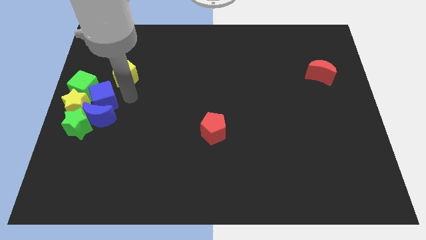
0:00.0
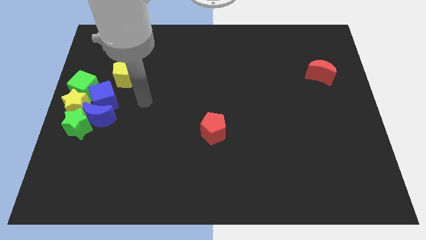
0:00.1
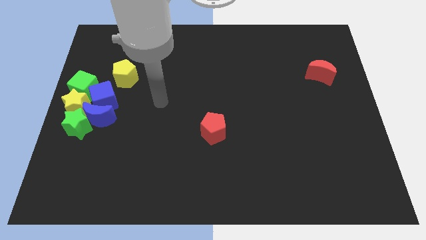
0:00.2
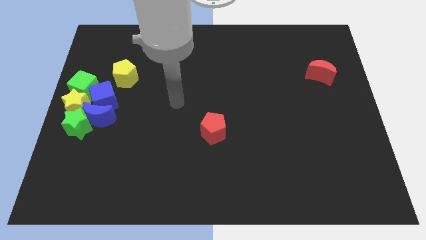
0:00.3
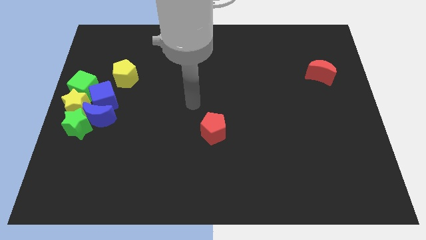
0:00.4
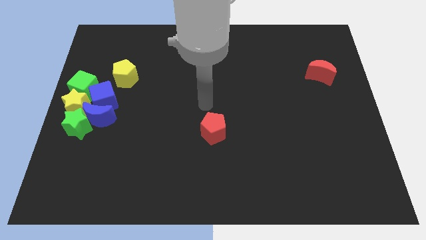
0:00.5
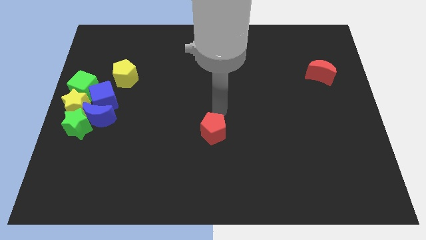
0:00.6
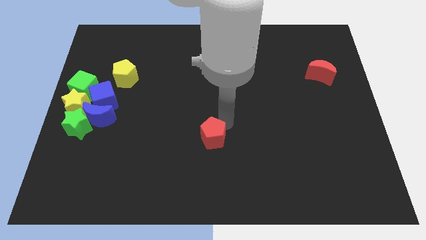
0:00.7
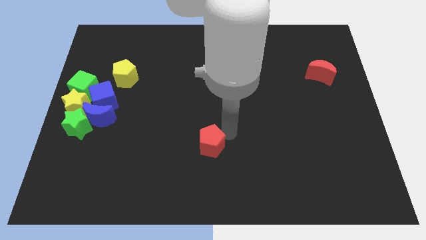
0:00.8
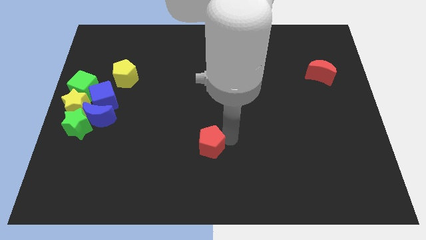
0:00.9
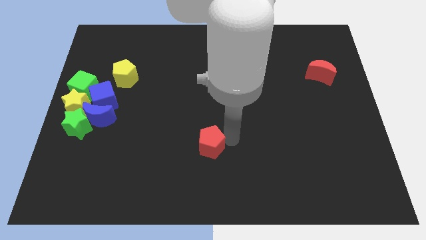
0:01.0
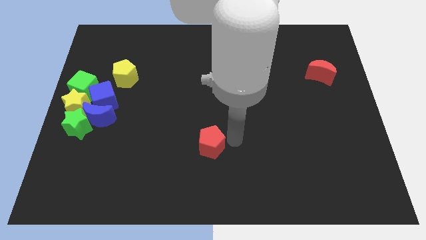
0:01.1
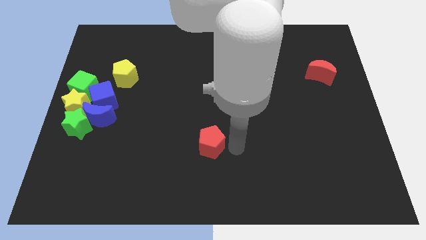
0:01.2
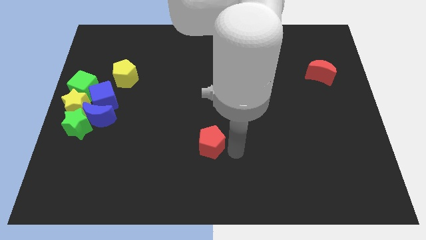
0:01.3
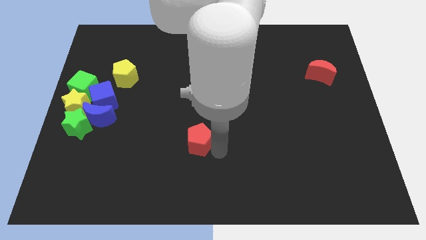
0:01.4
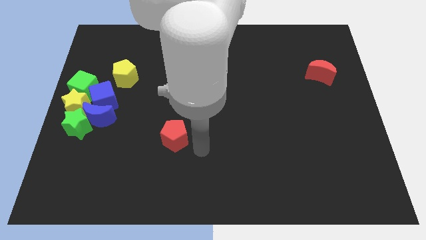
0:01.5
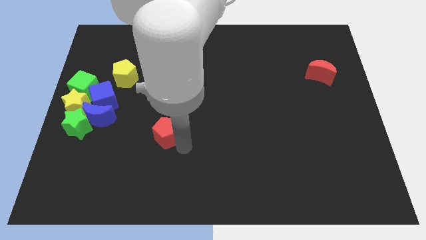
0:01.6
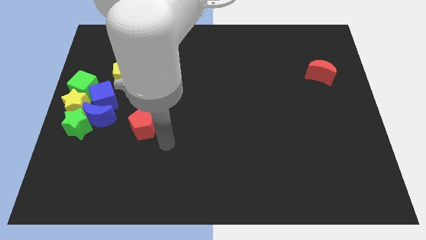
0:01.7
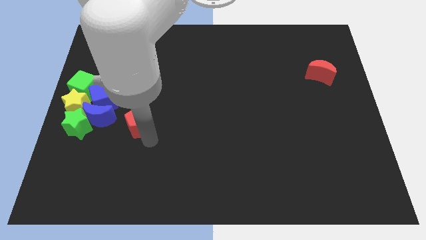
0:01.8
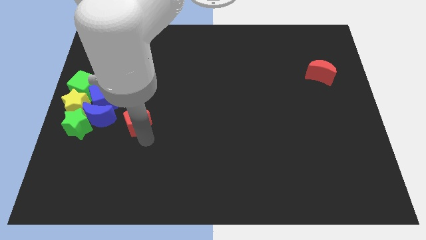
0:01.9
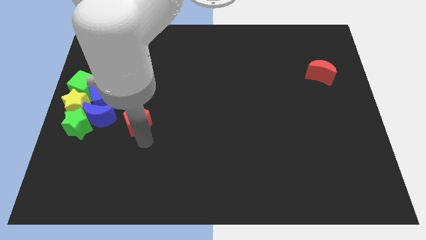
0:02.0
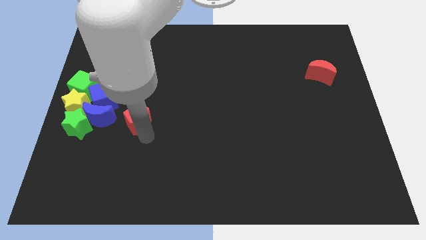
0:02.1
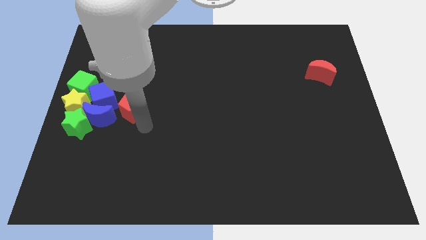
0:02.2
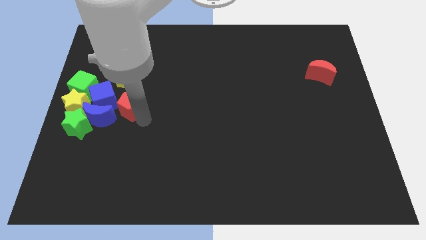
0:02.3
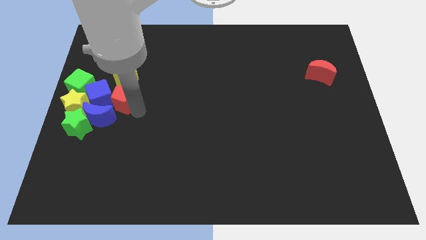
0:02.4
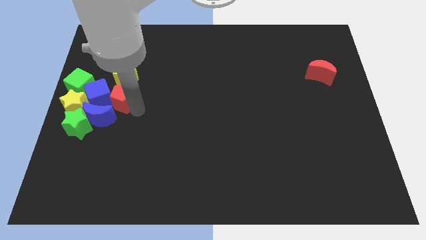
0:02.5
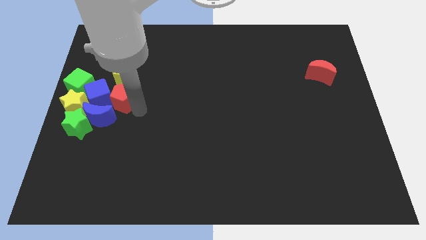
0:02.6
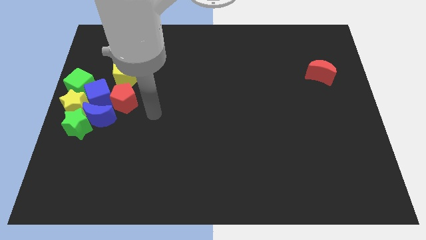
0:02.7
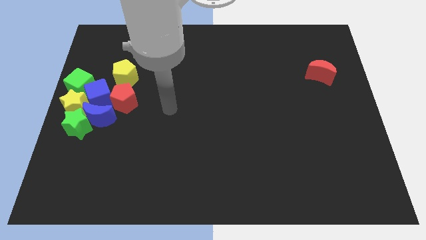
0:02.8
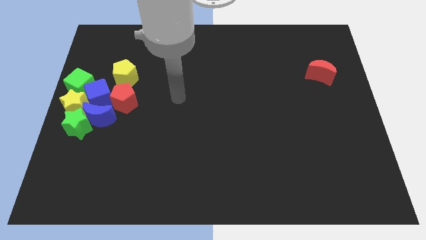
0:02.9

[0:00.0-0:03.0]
push the red pentagon to the right of the blue cube

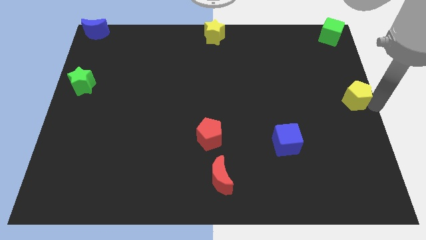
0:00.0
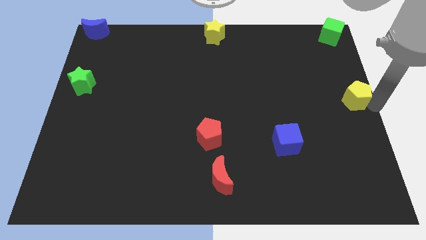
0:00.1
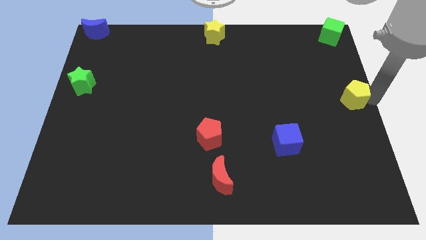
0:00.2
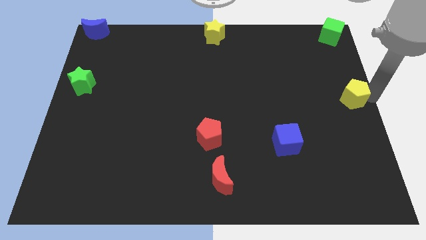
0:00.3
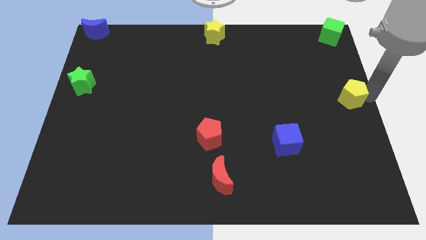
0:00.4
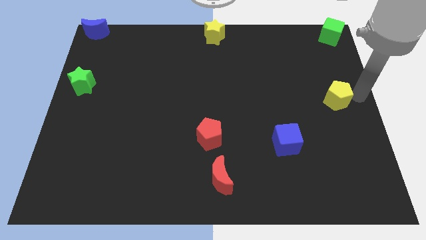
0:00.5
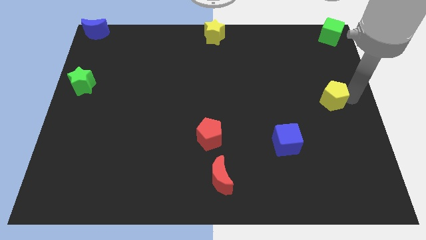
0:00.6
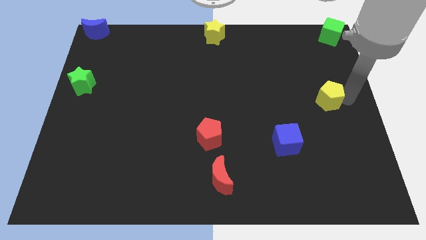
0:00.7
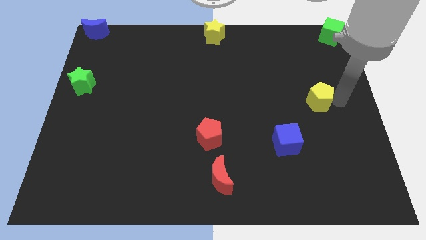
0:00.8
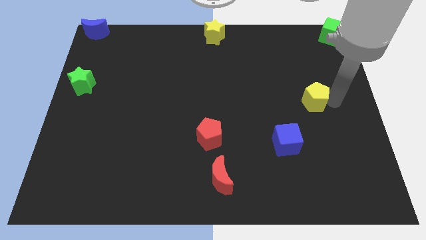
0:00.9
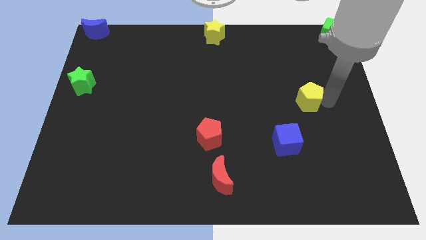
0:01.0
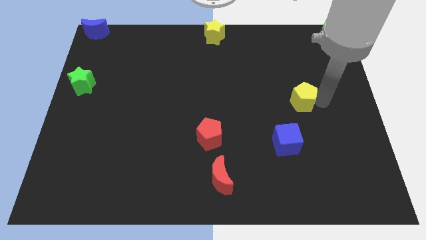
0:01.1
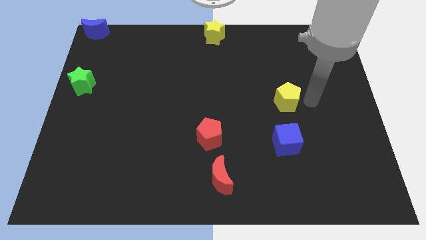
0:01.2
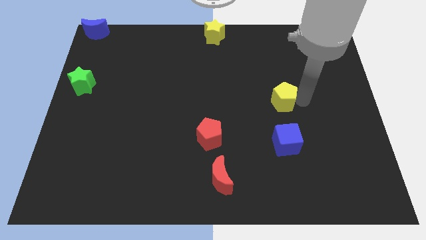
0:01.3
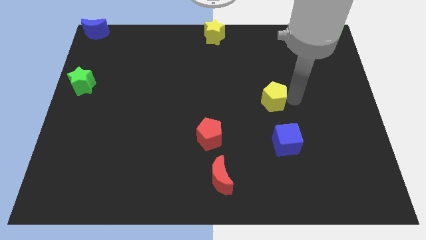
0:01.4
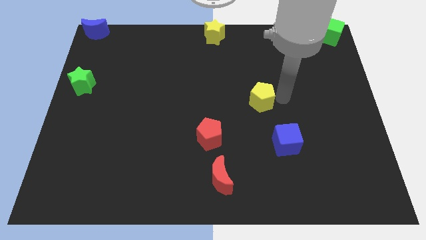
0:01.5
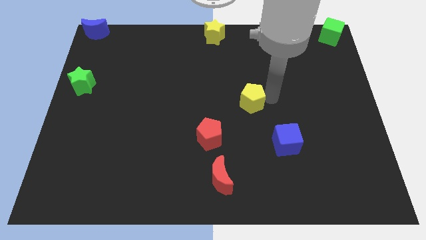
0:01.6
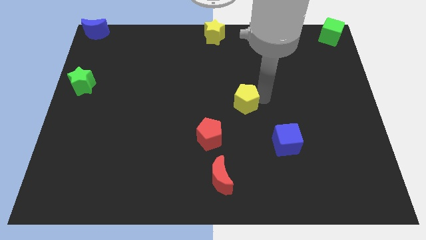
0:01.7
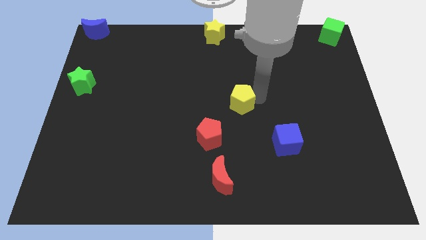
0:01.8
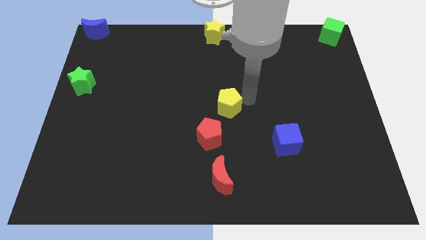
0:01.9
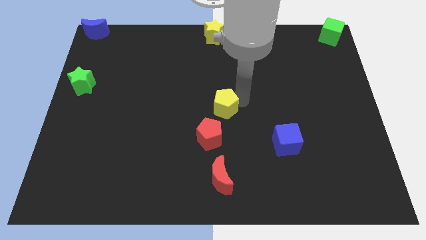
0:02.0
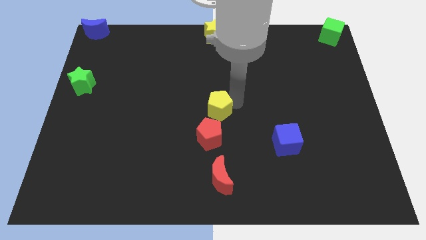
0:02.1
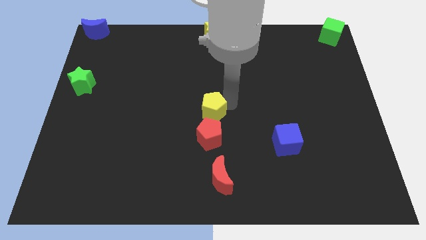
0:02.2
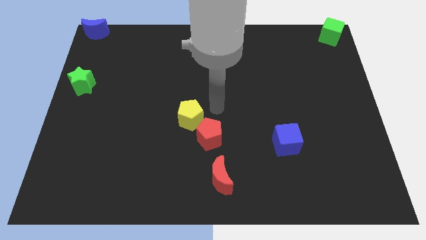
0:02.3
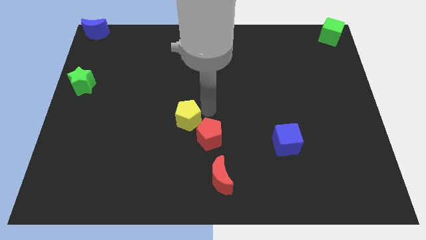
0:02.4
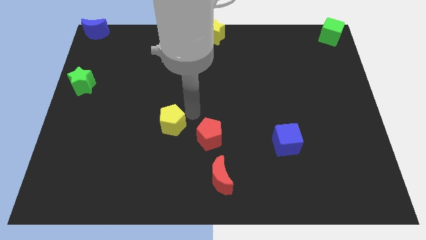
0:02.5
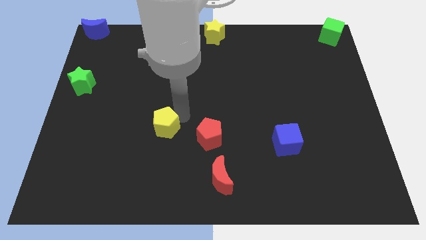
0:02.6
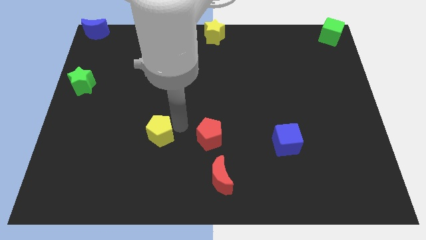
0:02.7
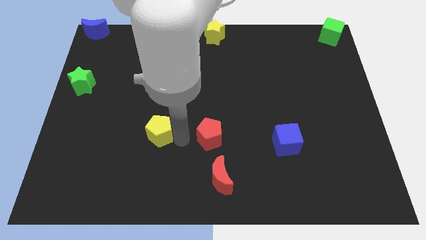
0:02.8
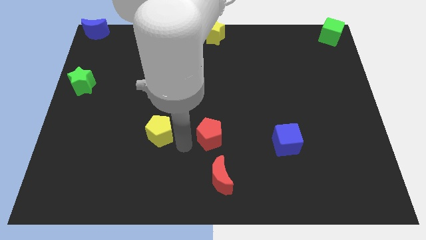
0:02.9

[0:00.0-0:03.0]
place the yellow pentagon left to the red pentagon

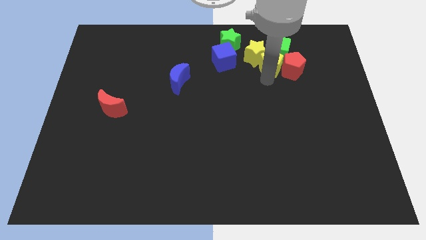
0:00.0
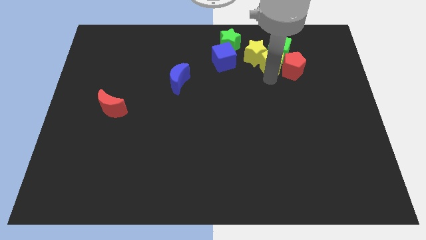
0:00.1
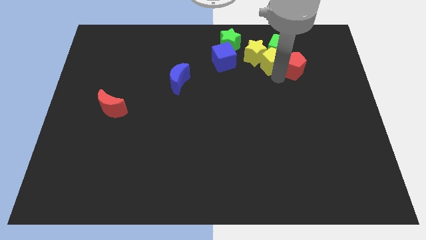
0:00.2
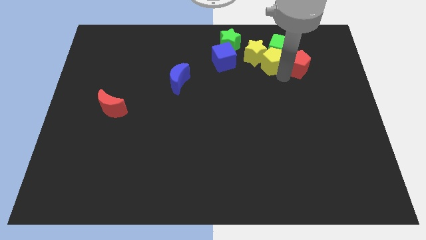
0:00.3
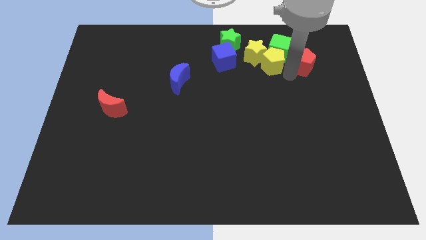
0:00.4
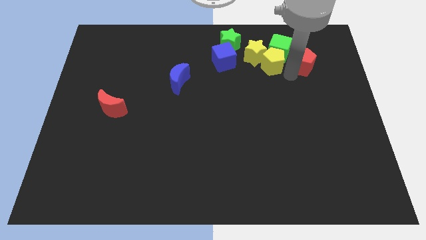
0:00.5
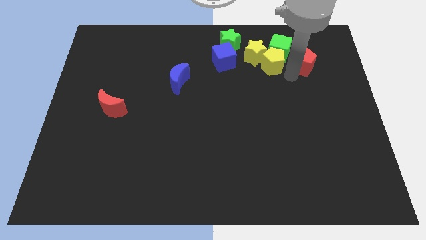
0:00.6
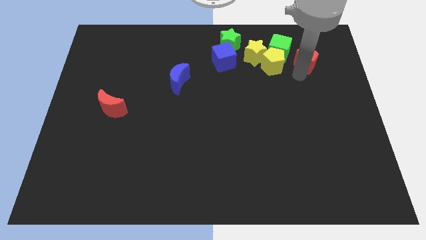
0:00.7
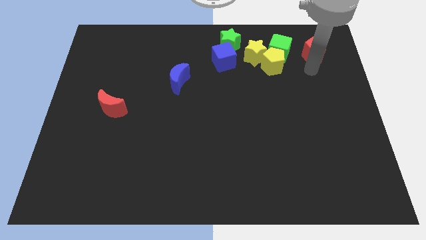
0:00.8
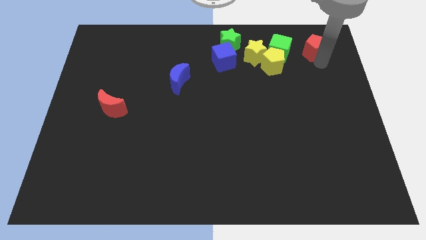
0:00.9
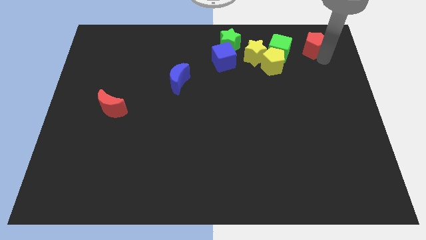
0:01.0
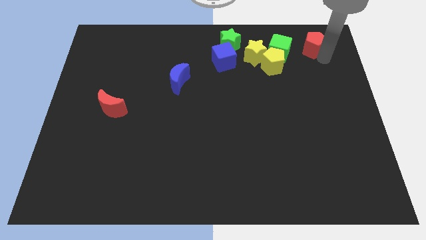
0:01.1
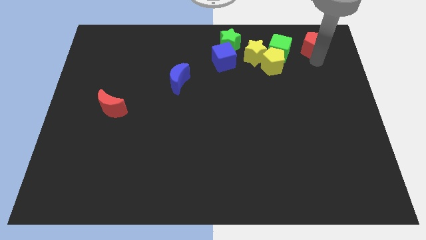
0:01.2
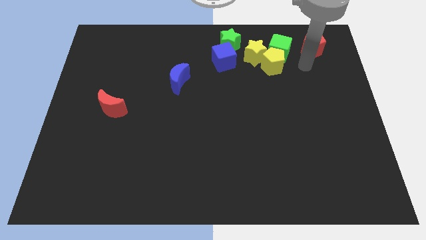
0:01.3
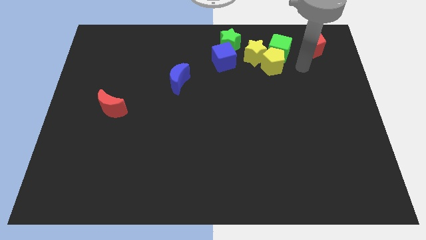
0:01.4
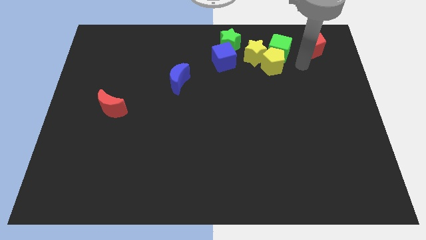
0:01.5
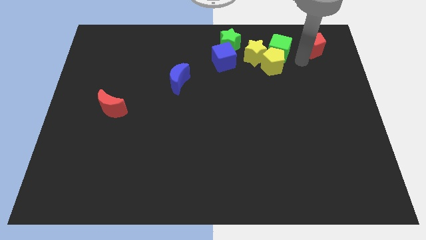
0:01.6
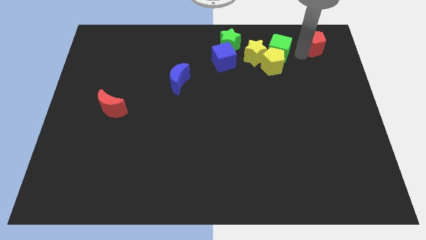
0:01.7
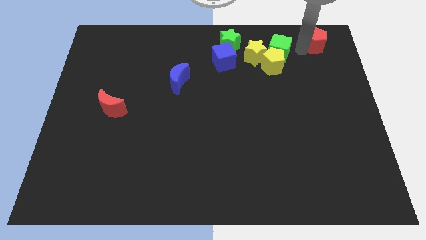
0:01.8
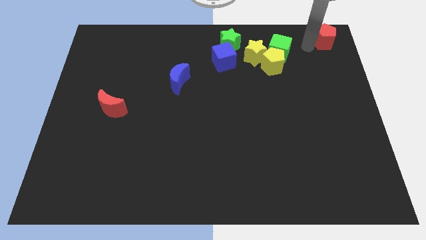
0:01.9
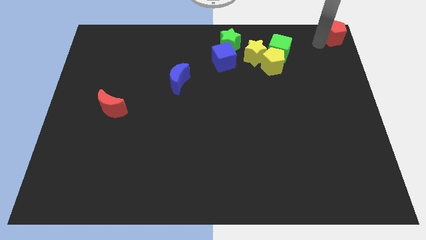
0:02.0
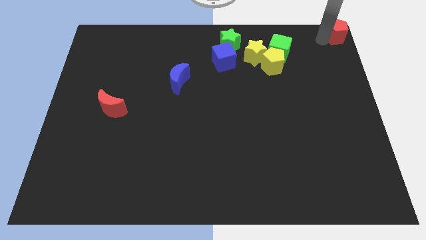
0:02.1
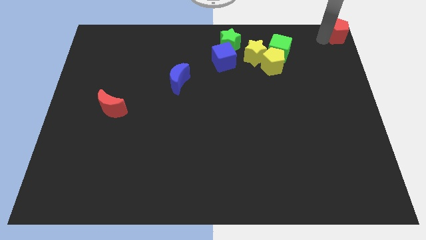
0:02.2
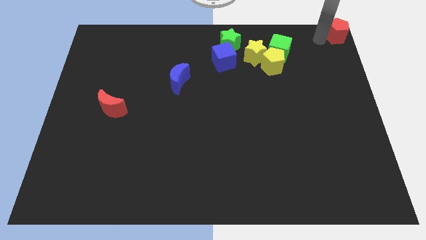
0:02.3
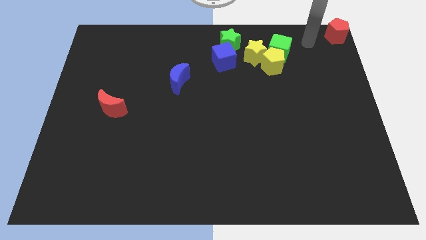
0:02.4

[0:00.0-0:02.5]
move the red pentagon to the top right corner

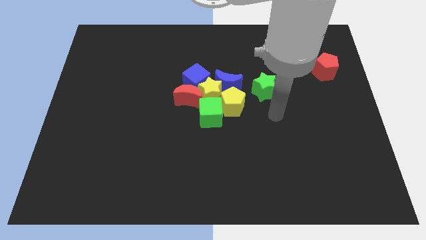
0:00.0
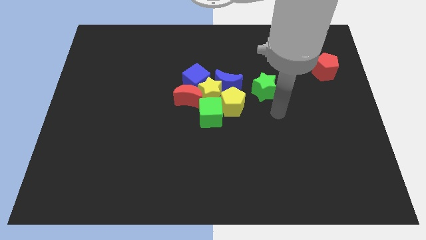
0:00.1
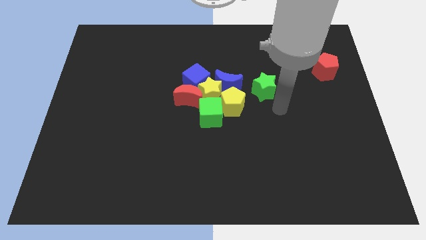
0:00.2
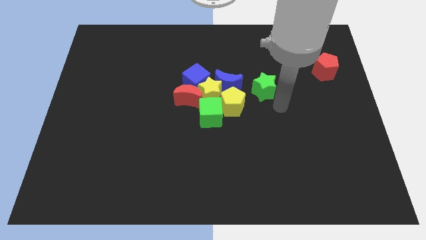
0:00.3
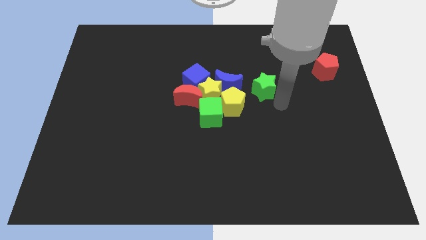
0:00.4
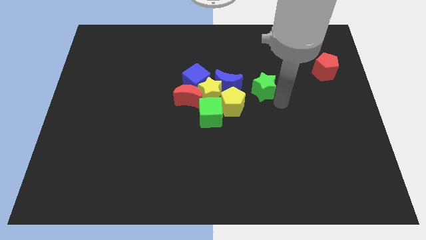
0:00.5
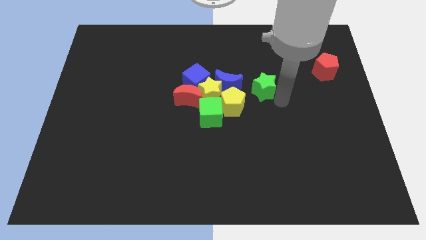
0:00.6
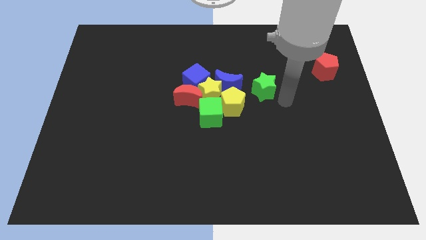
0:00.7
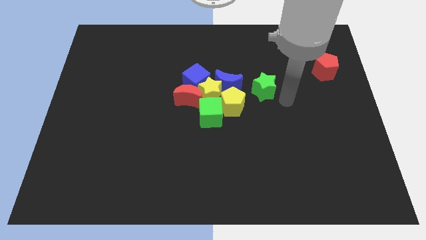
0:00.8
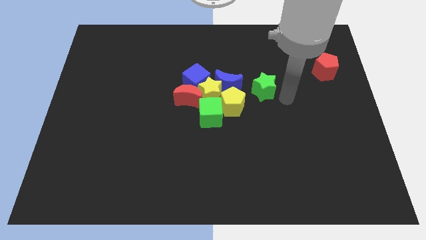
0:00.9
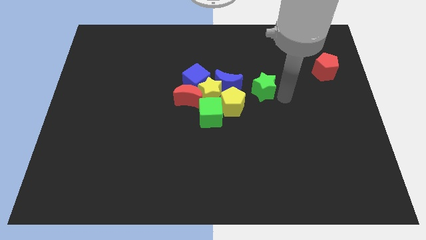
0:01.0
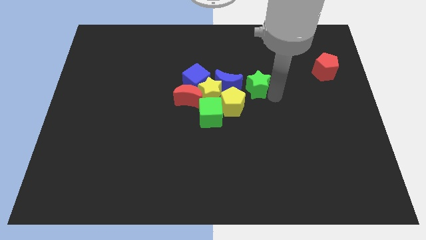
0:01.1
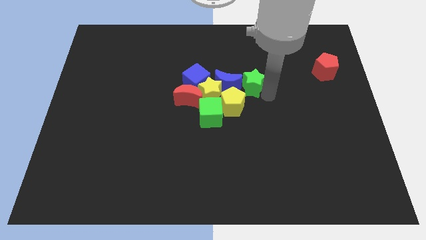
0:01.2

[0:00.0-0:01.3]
push the green star into the right side of the blue moon
